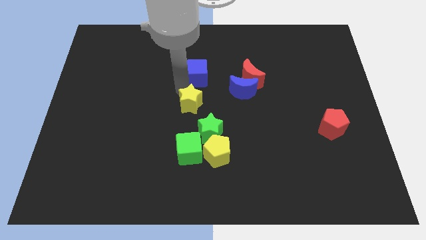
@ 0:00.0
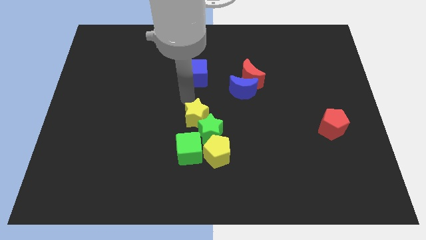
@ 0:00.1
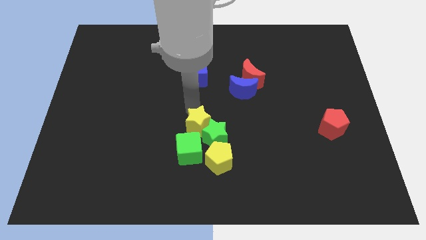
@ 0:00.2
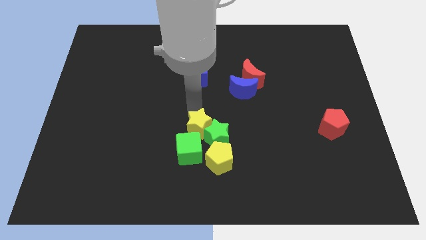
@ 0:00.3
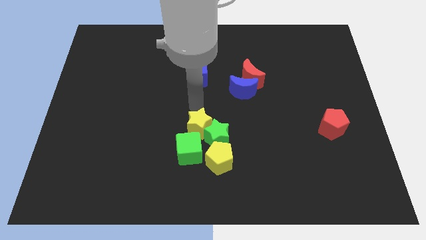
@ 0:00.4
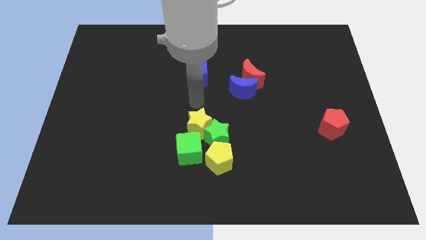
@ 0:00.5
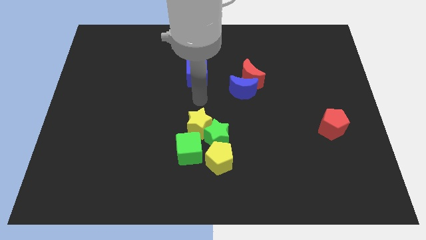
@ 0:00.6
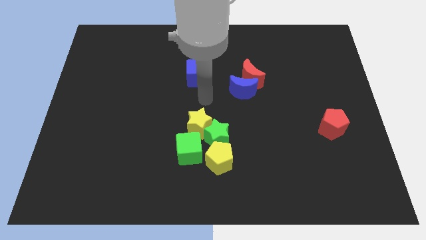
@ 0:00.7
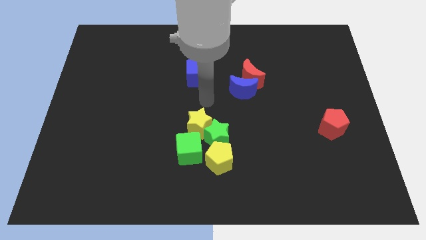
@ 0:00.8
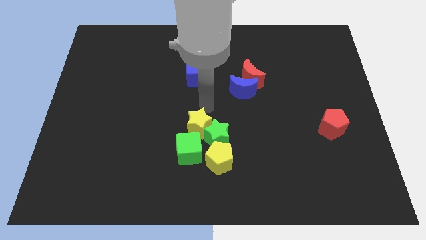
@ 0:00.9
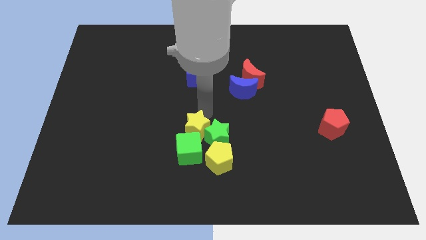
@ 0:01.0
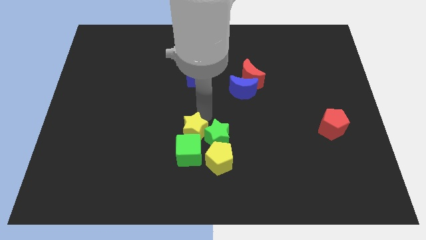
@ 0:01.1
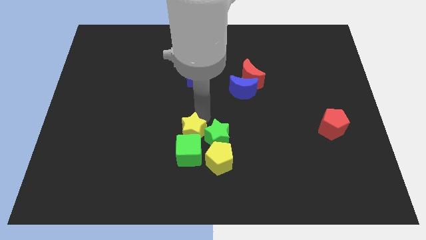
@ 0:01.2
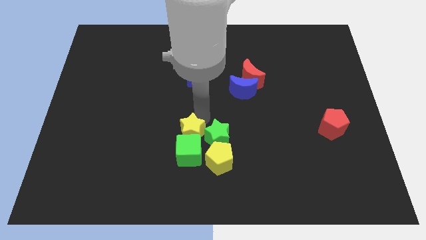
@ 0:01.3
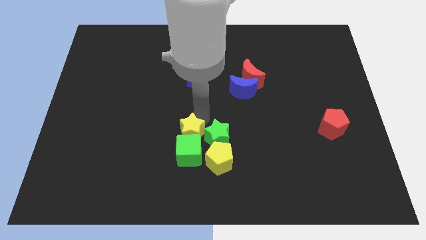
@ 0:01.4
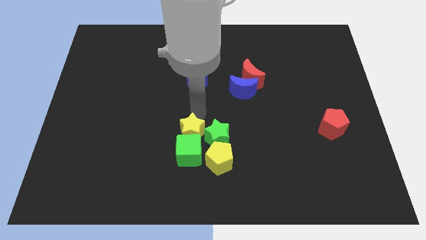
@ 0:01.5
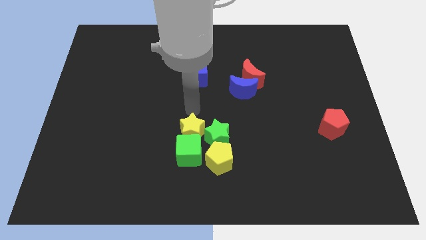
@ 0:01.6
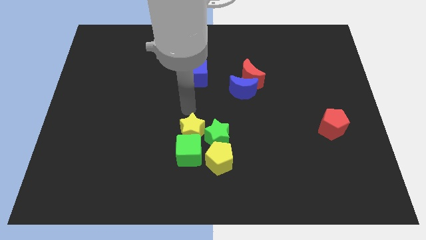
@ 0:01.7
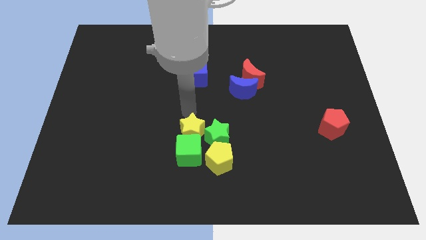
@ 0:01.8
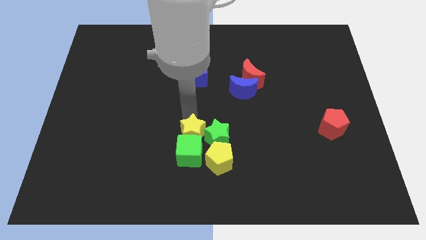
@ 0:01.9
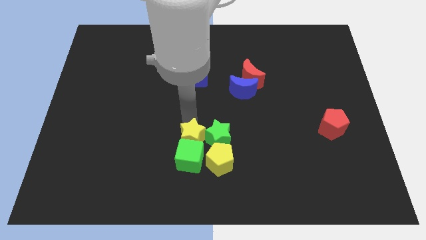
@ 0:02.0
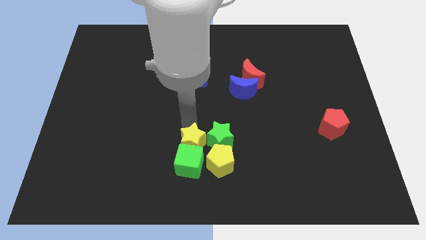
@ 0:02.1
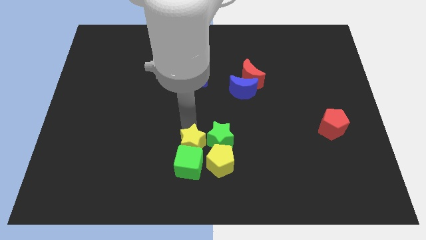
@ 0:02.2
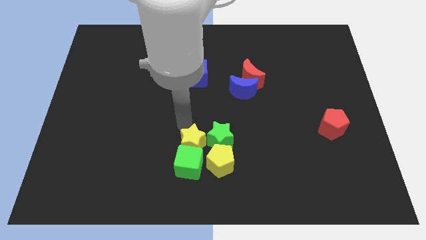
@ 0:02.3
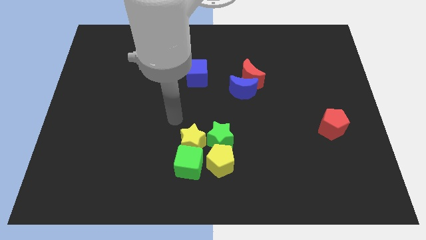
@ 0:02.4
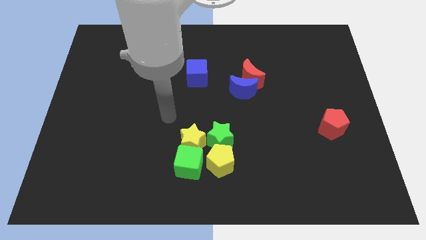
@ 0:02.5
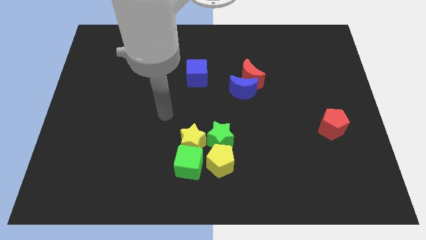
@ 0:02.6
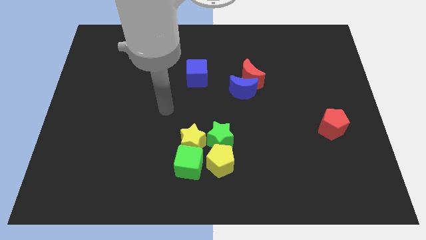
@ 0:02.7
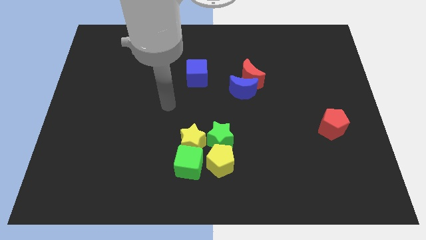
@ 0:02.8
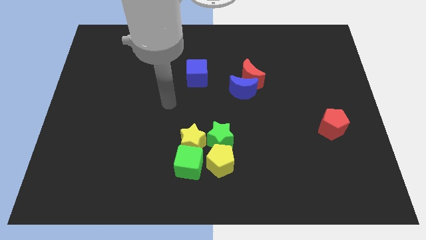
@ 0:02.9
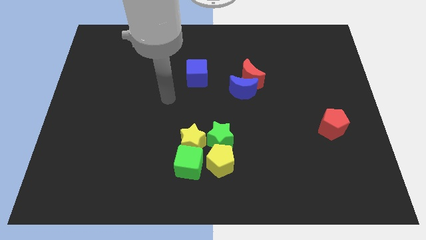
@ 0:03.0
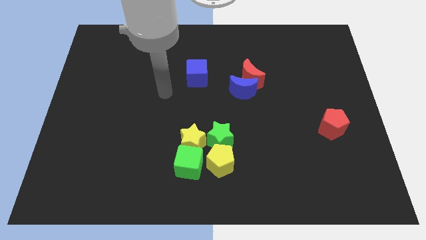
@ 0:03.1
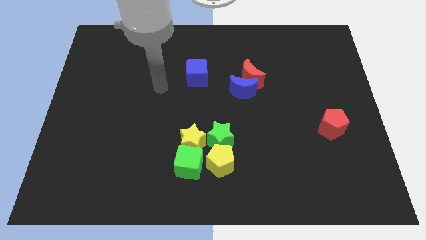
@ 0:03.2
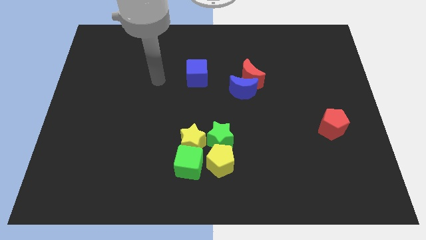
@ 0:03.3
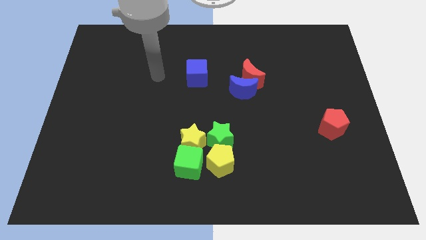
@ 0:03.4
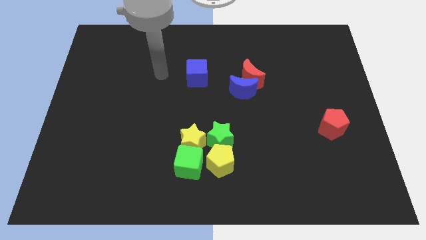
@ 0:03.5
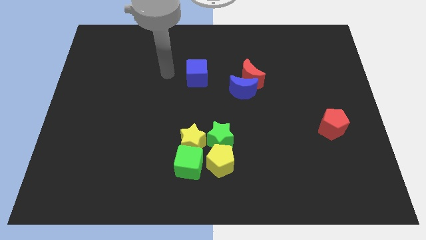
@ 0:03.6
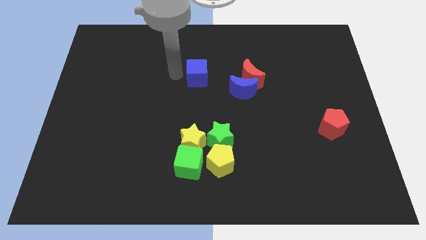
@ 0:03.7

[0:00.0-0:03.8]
move the yellow star into the top of the green cube

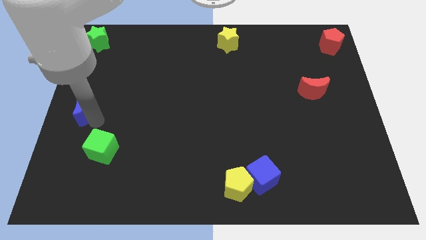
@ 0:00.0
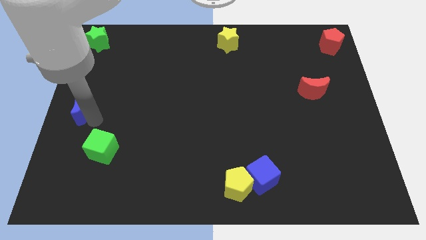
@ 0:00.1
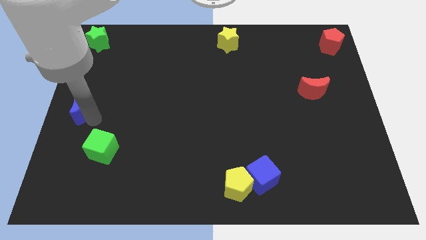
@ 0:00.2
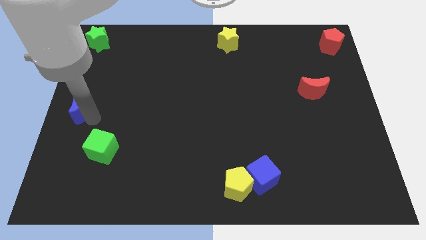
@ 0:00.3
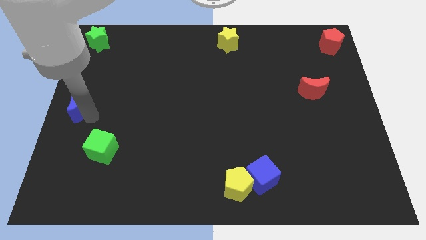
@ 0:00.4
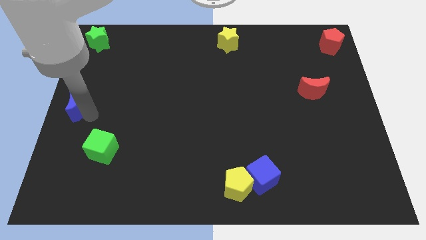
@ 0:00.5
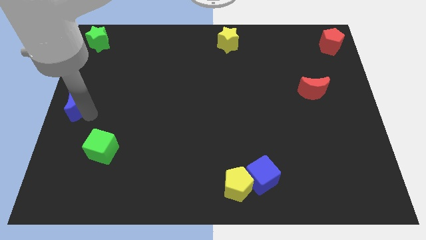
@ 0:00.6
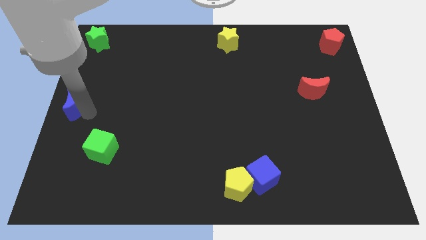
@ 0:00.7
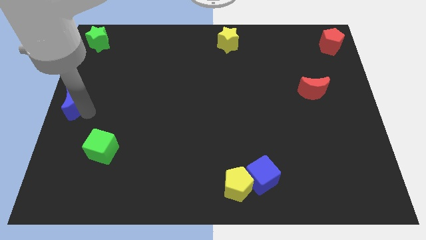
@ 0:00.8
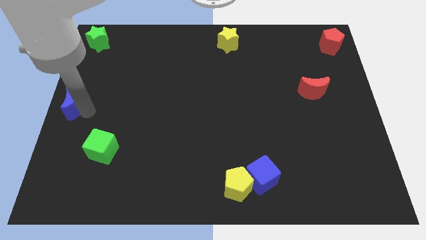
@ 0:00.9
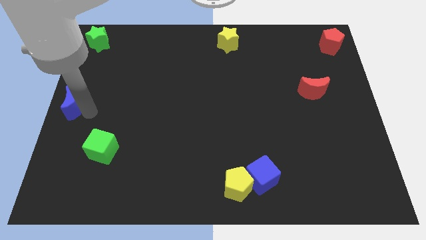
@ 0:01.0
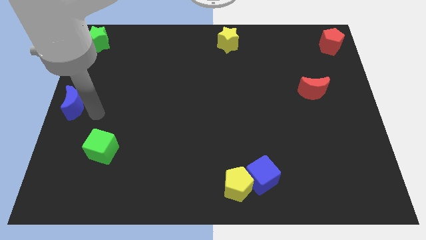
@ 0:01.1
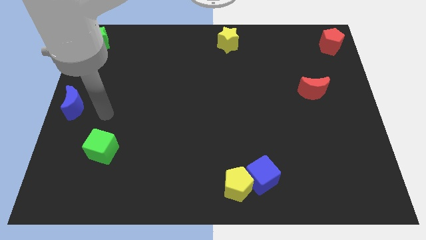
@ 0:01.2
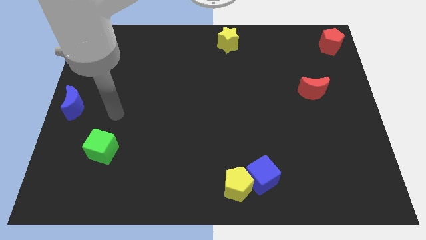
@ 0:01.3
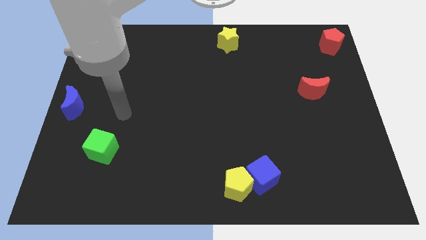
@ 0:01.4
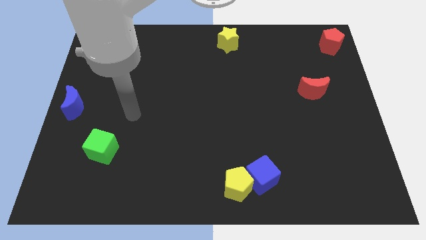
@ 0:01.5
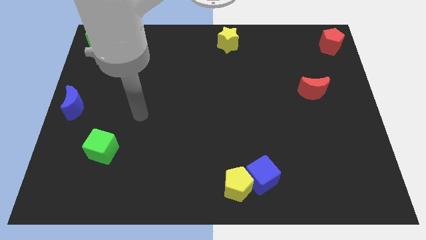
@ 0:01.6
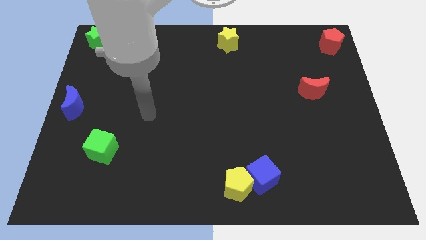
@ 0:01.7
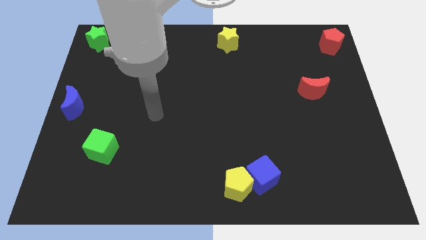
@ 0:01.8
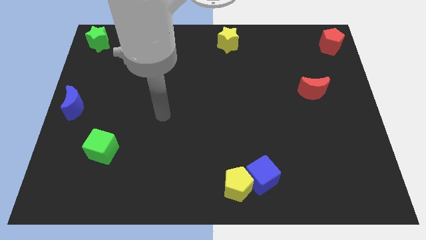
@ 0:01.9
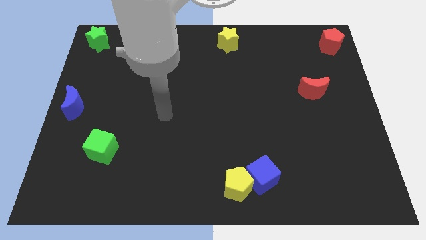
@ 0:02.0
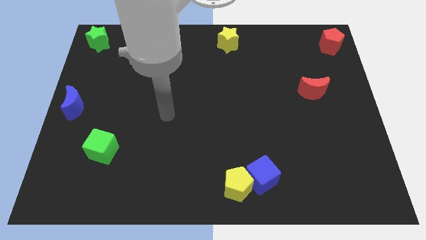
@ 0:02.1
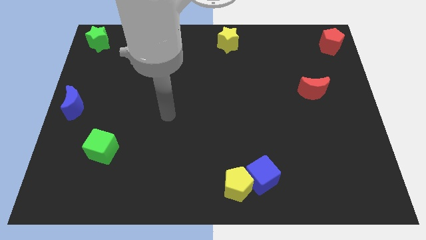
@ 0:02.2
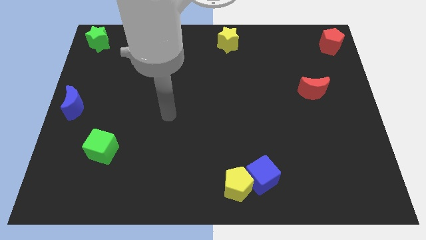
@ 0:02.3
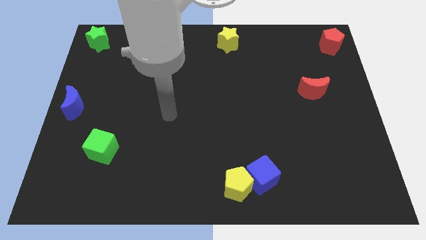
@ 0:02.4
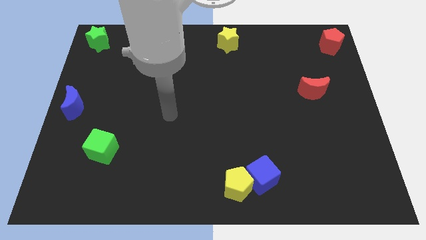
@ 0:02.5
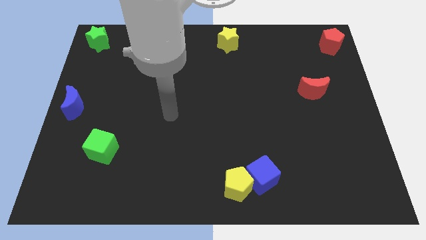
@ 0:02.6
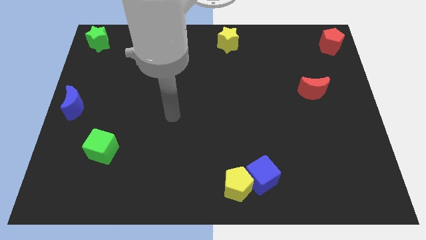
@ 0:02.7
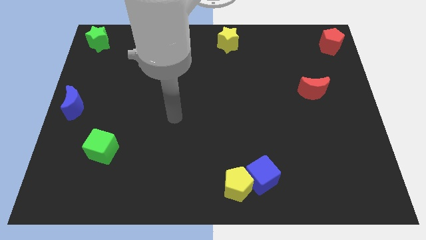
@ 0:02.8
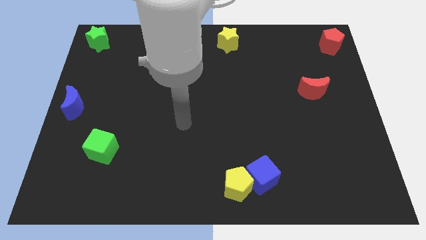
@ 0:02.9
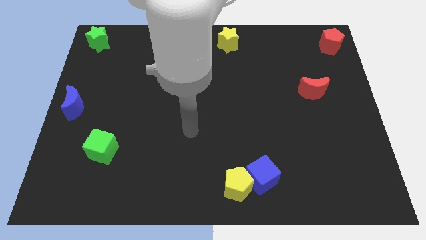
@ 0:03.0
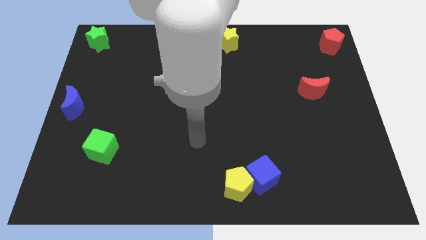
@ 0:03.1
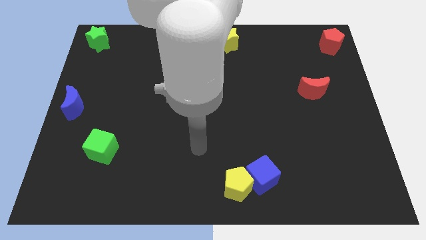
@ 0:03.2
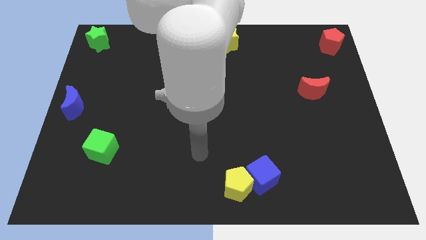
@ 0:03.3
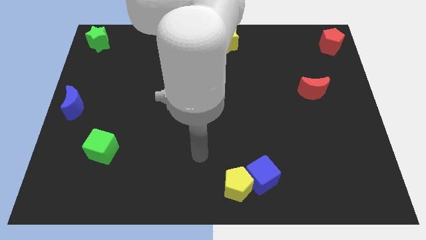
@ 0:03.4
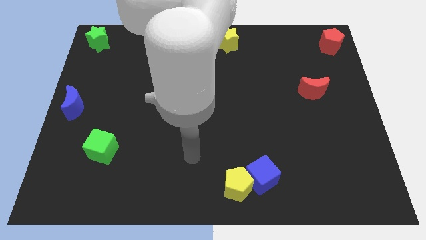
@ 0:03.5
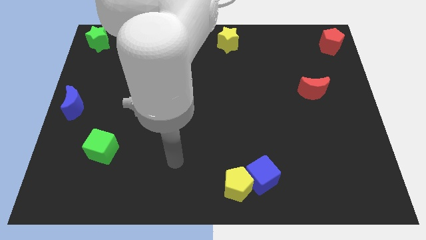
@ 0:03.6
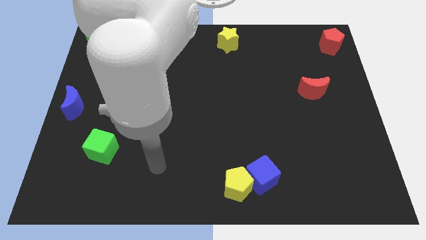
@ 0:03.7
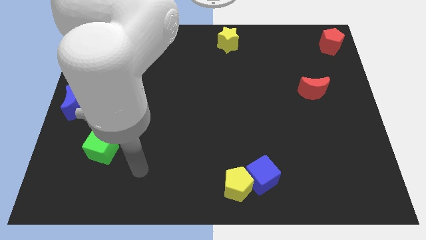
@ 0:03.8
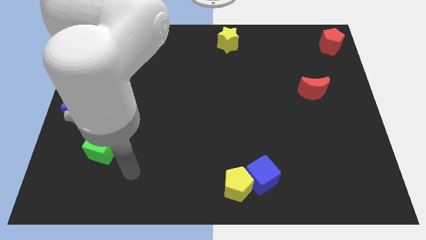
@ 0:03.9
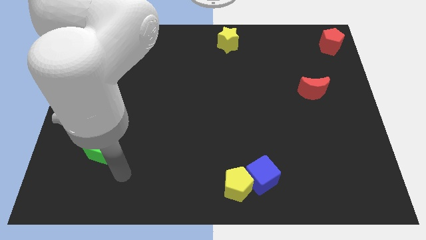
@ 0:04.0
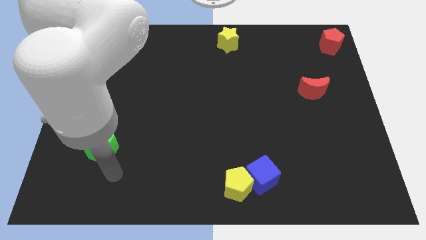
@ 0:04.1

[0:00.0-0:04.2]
move your arm away form the blue crescent

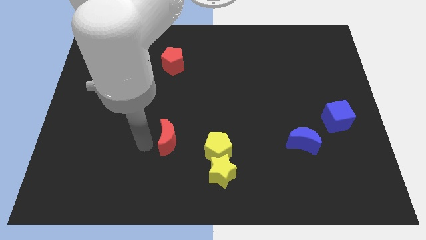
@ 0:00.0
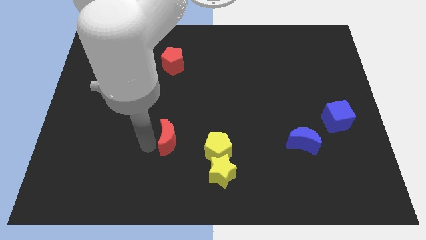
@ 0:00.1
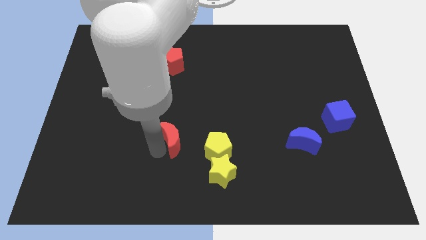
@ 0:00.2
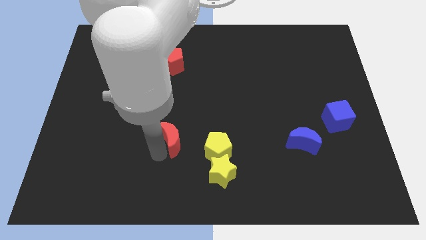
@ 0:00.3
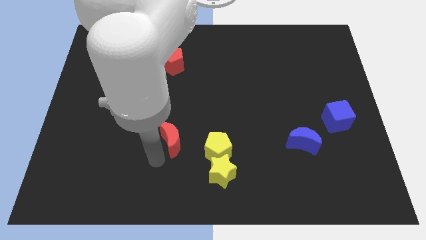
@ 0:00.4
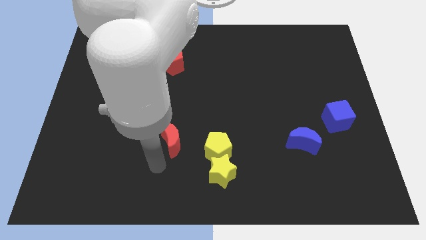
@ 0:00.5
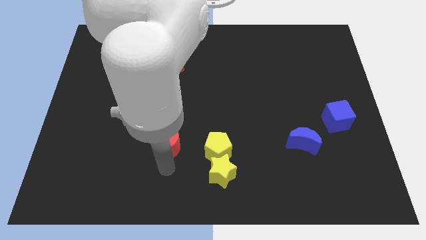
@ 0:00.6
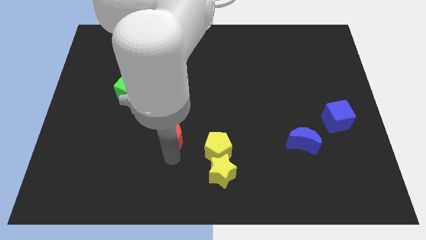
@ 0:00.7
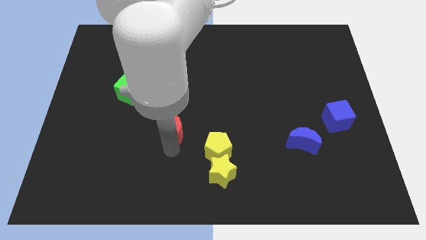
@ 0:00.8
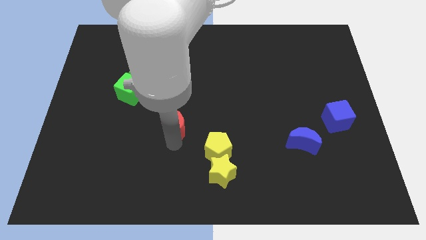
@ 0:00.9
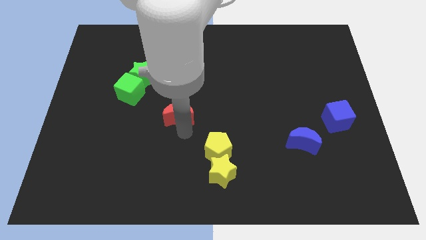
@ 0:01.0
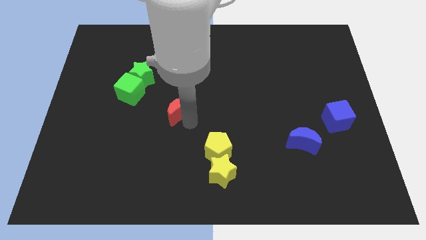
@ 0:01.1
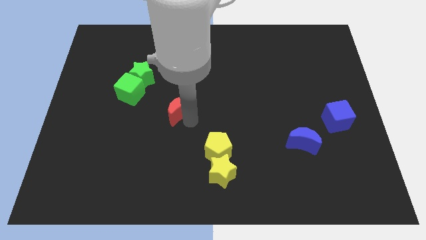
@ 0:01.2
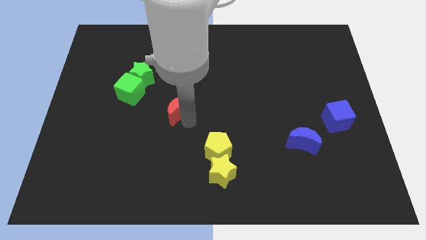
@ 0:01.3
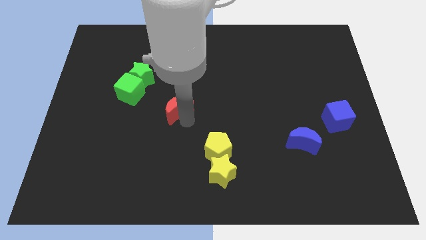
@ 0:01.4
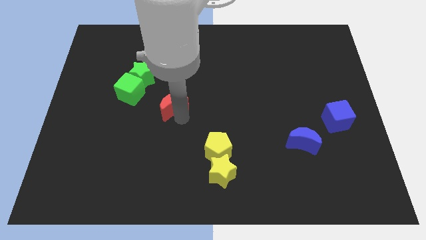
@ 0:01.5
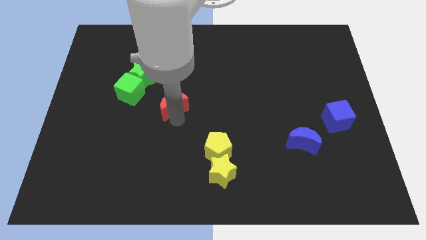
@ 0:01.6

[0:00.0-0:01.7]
push the red crescent towards the green cube
